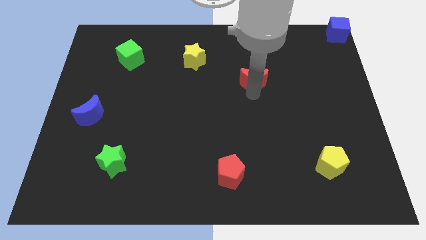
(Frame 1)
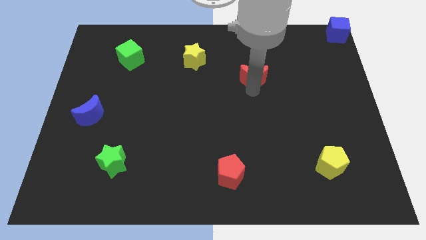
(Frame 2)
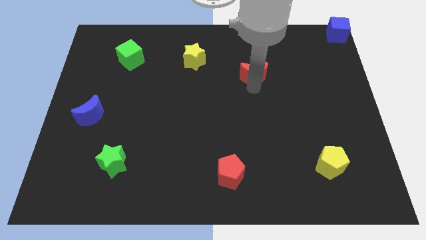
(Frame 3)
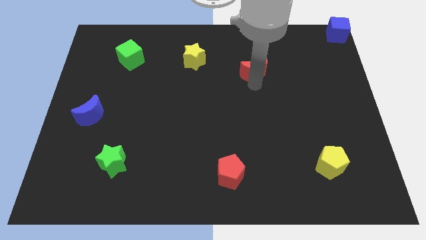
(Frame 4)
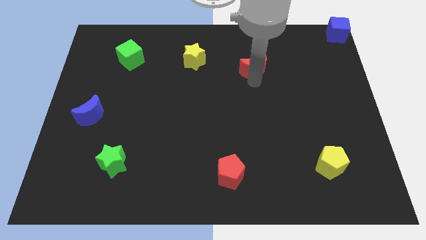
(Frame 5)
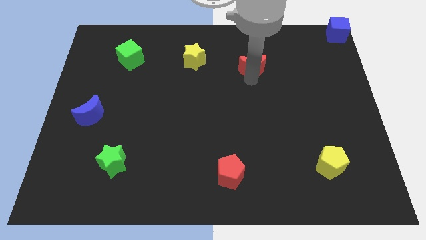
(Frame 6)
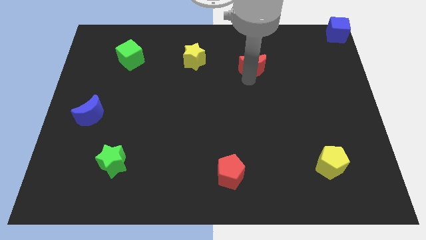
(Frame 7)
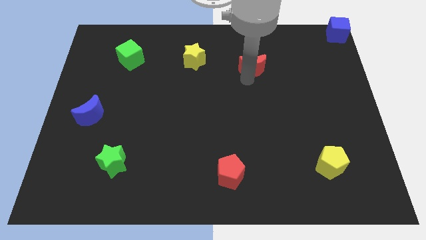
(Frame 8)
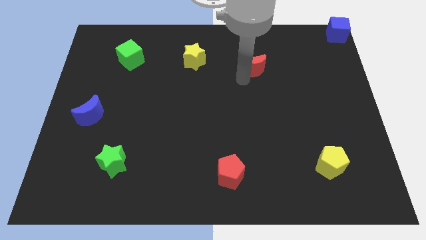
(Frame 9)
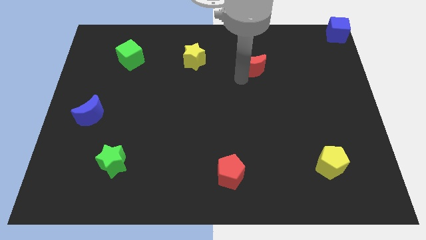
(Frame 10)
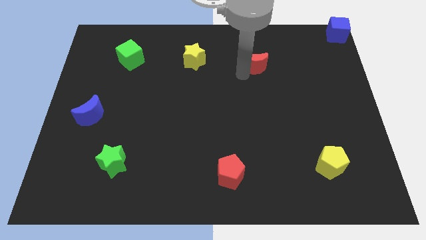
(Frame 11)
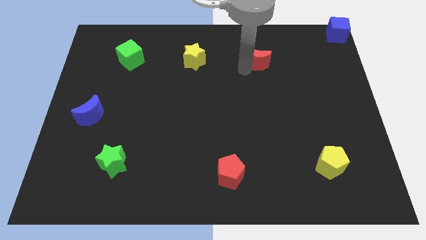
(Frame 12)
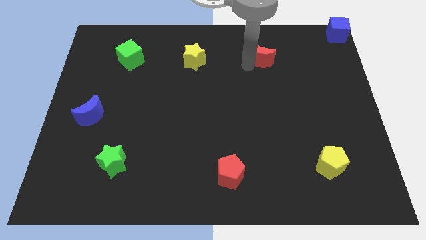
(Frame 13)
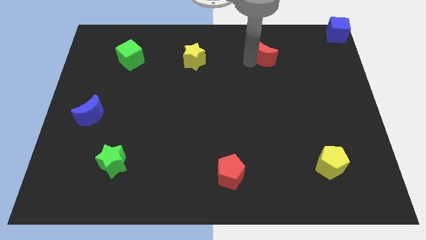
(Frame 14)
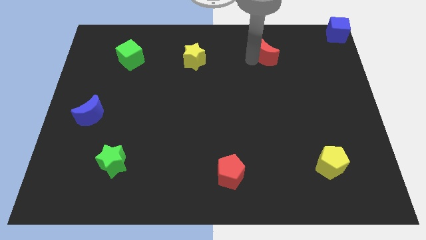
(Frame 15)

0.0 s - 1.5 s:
move the red moon to the right of the yellow star

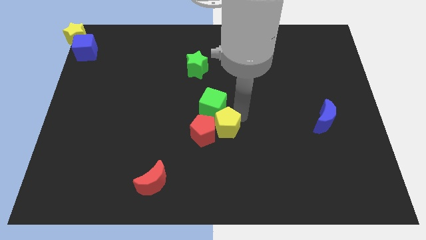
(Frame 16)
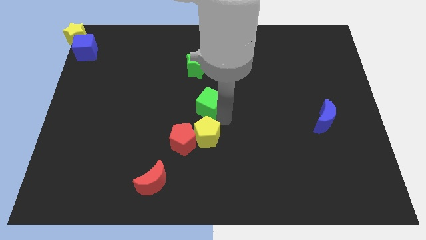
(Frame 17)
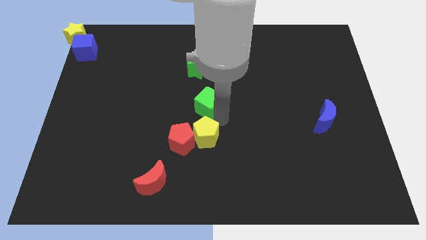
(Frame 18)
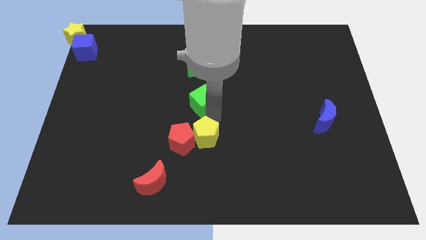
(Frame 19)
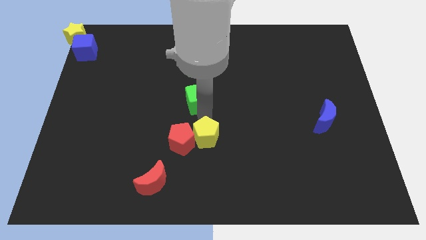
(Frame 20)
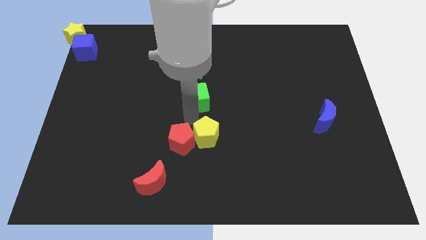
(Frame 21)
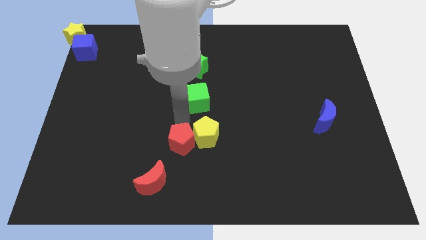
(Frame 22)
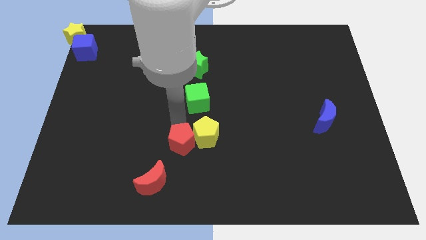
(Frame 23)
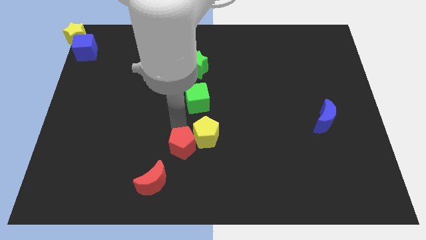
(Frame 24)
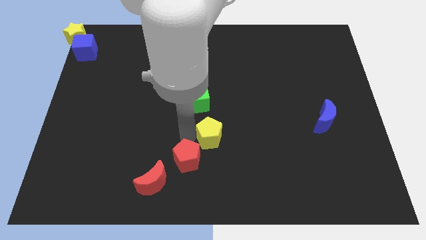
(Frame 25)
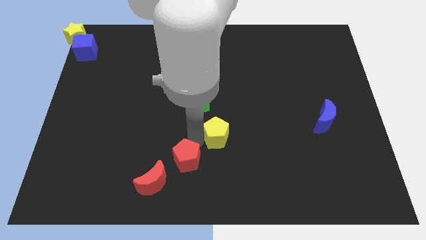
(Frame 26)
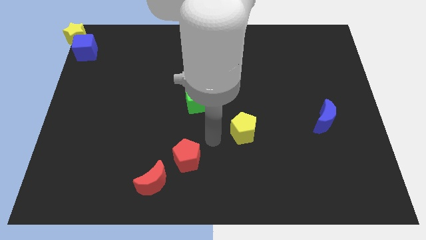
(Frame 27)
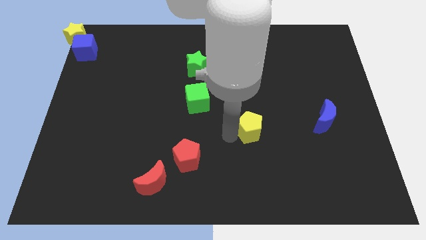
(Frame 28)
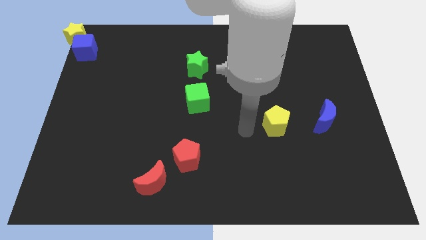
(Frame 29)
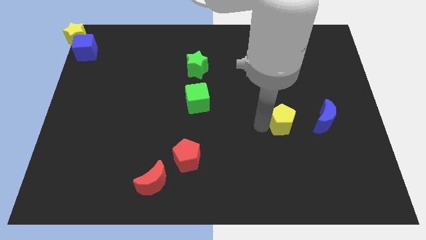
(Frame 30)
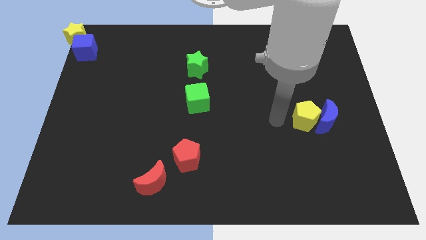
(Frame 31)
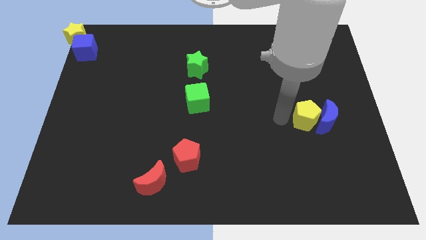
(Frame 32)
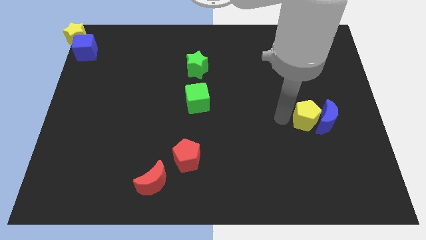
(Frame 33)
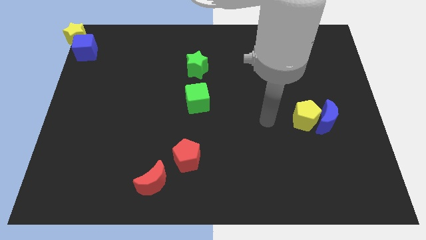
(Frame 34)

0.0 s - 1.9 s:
push yellow pentagon close to blue moon

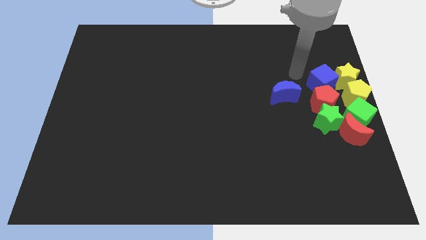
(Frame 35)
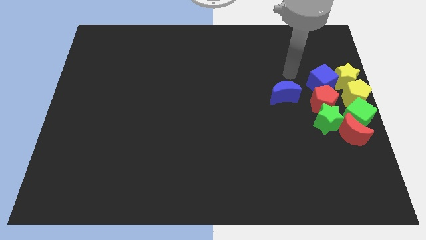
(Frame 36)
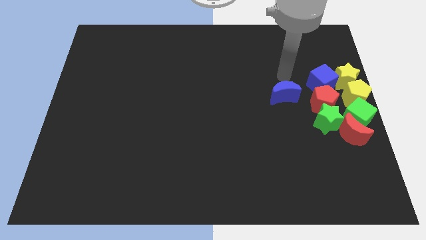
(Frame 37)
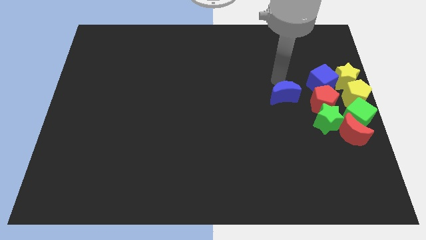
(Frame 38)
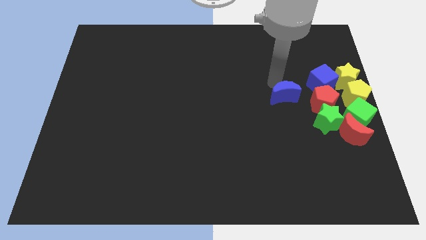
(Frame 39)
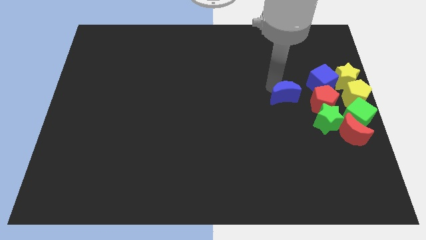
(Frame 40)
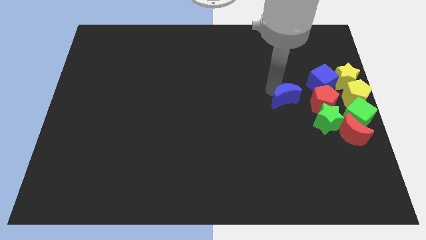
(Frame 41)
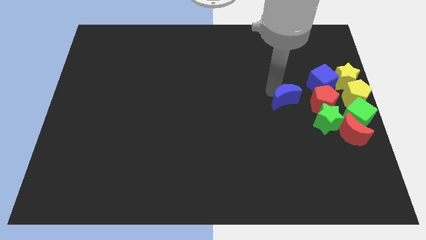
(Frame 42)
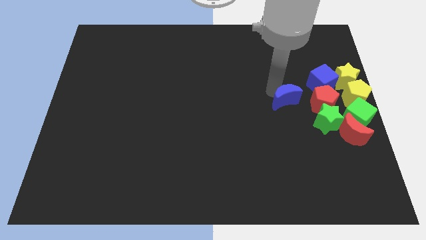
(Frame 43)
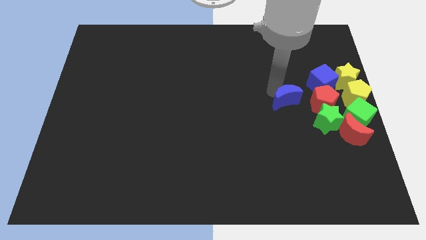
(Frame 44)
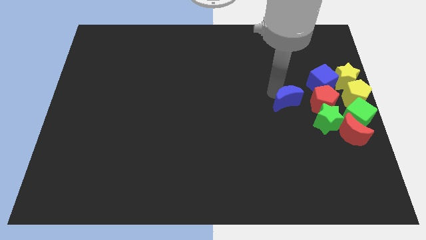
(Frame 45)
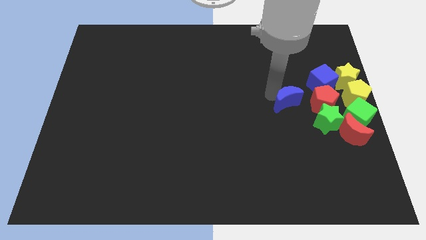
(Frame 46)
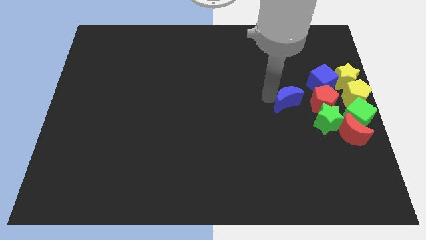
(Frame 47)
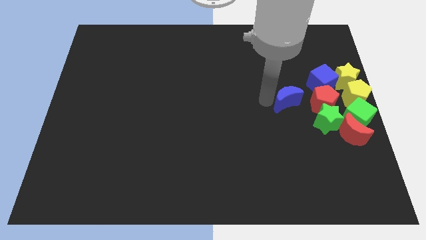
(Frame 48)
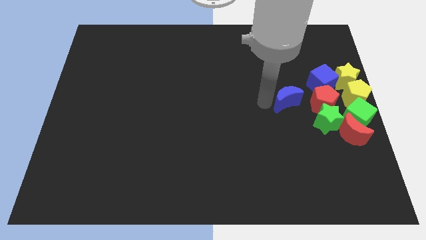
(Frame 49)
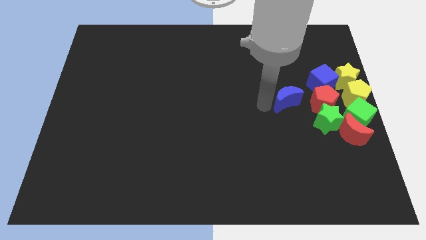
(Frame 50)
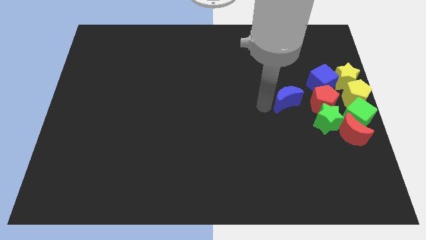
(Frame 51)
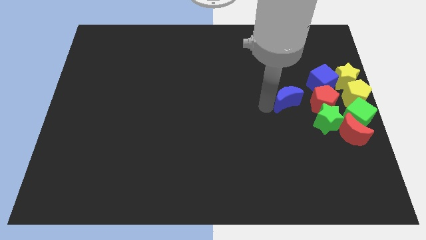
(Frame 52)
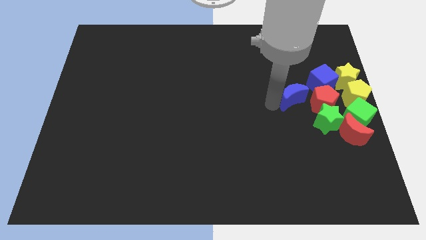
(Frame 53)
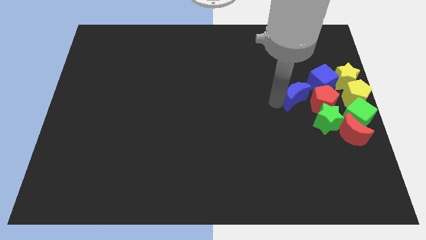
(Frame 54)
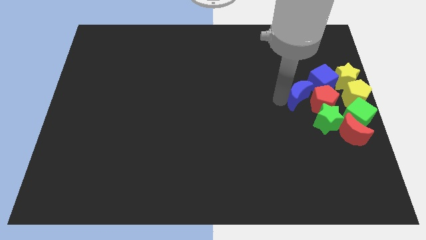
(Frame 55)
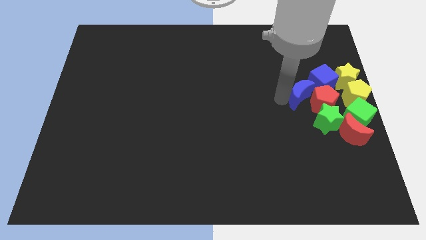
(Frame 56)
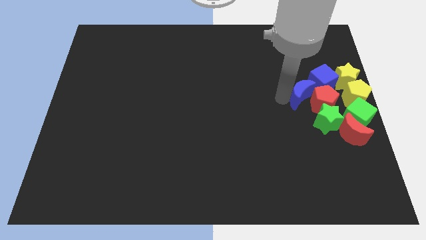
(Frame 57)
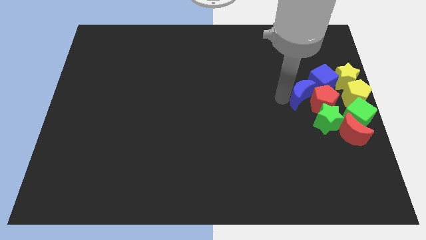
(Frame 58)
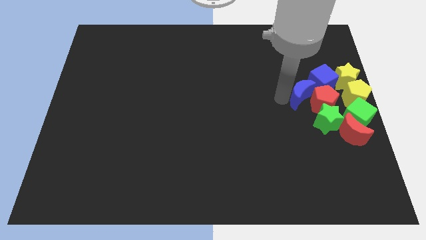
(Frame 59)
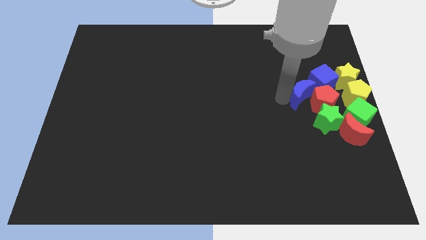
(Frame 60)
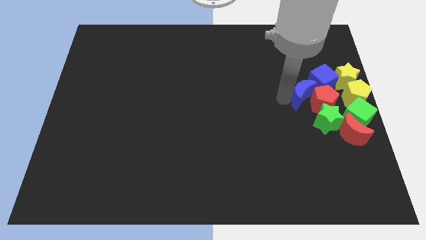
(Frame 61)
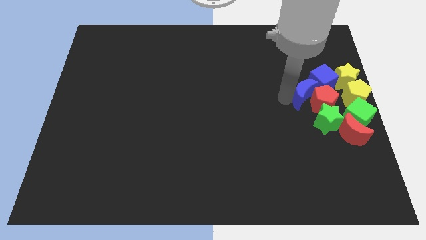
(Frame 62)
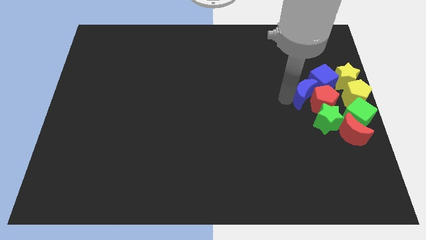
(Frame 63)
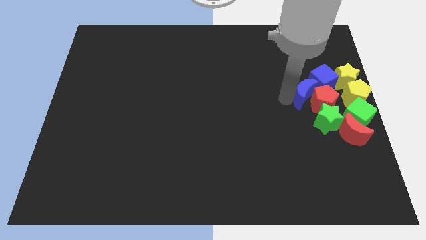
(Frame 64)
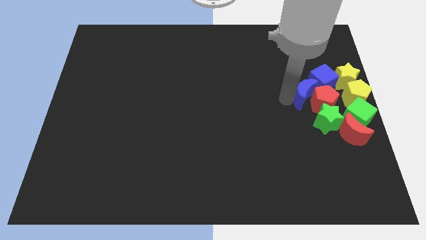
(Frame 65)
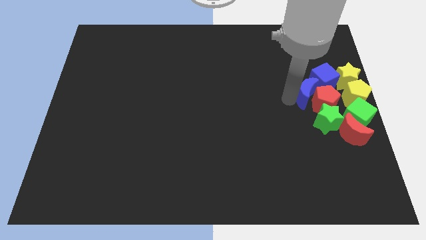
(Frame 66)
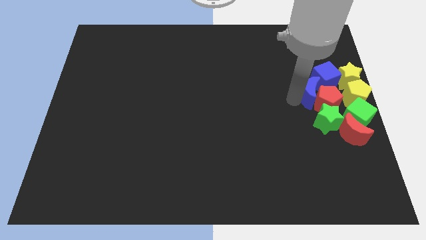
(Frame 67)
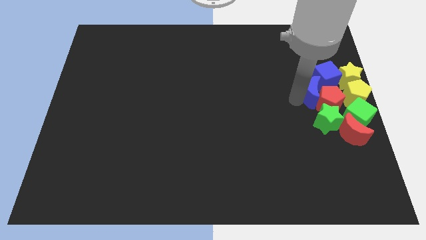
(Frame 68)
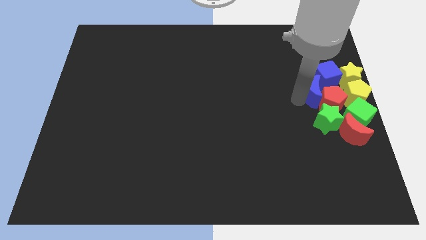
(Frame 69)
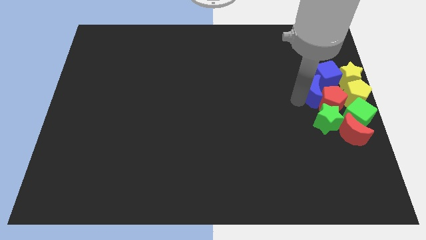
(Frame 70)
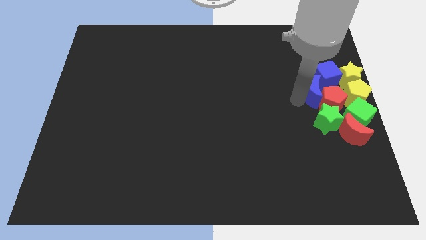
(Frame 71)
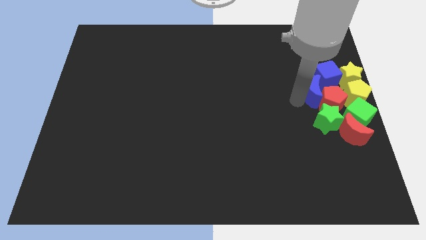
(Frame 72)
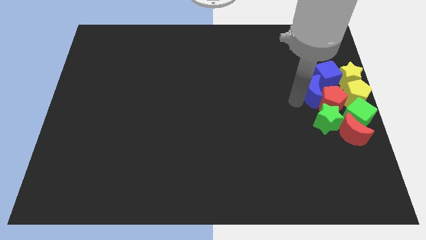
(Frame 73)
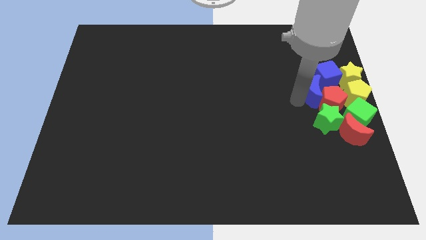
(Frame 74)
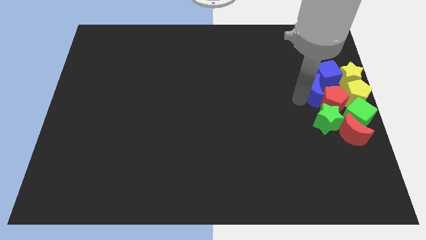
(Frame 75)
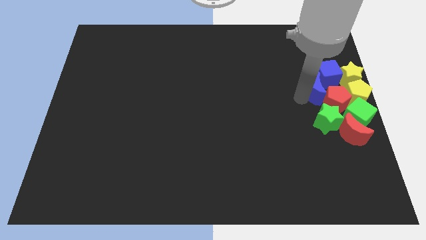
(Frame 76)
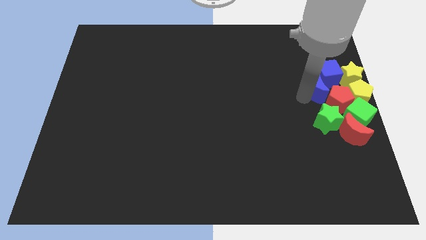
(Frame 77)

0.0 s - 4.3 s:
push blue crescent into blue cube

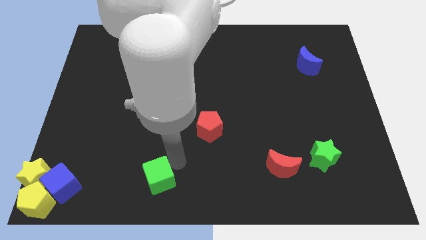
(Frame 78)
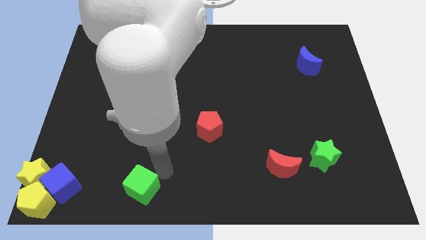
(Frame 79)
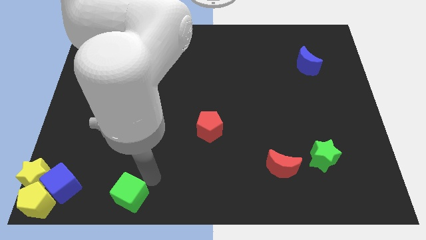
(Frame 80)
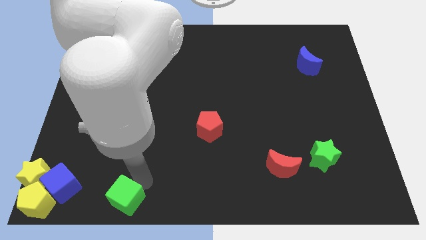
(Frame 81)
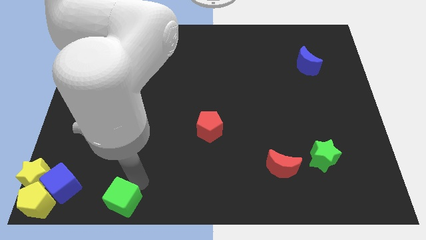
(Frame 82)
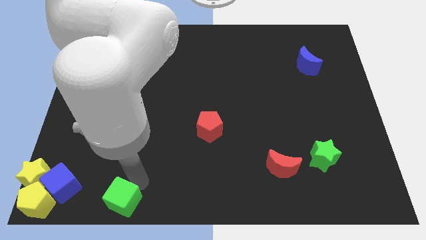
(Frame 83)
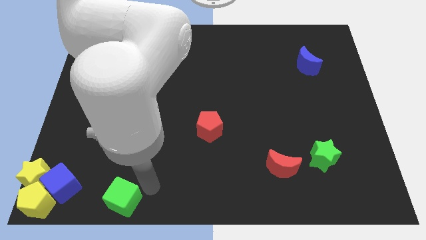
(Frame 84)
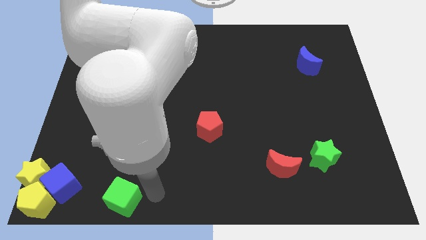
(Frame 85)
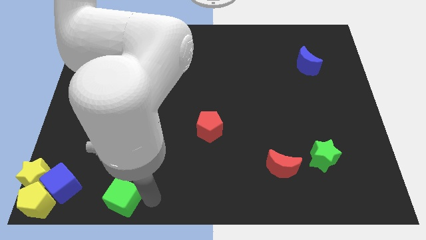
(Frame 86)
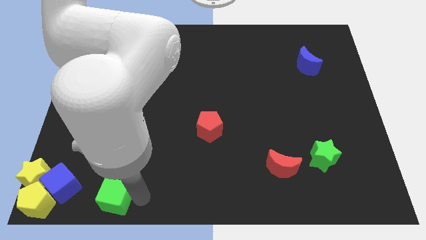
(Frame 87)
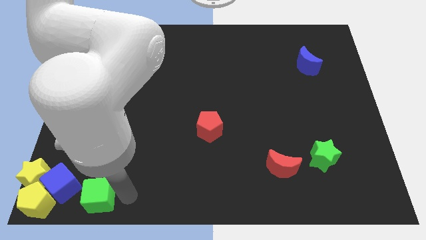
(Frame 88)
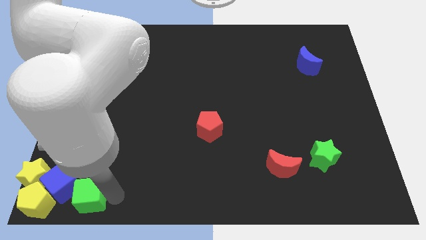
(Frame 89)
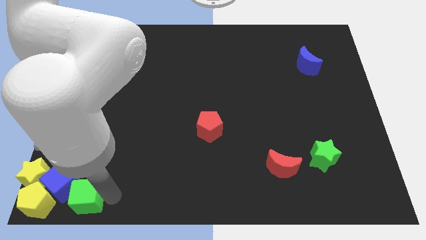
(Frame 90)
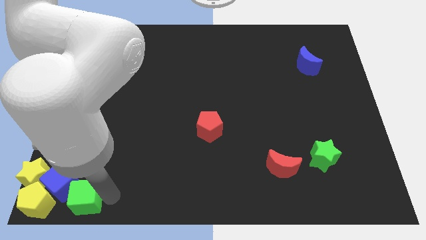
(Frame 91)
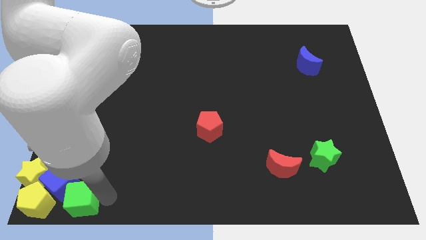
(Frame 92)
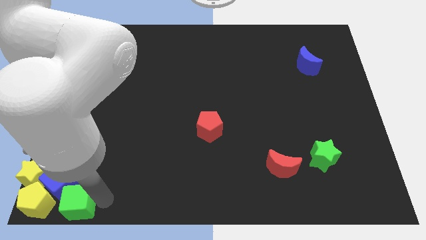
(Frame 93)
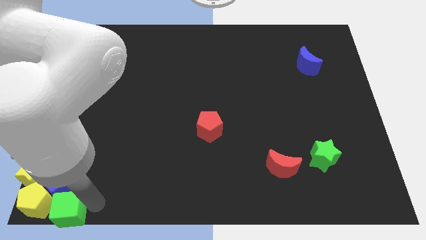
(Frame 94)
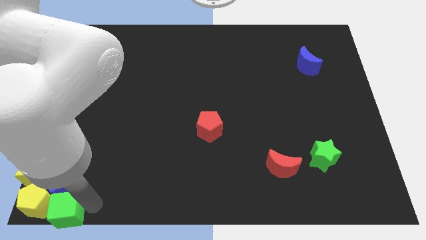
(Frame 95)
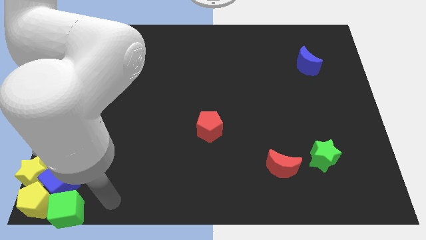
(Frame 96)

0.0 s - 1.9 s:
push the green star right to the yellow pentagon
